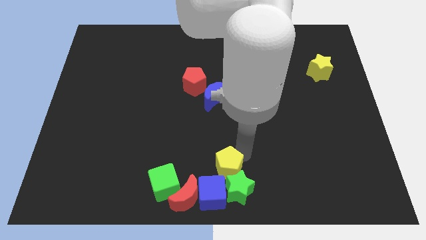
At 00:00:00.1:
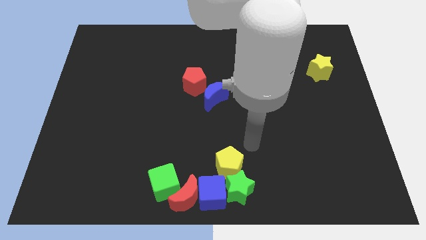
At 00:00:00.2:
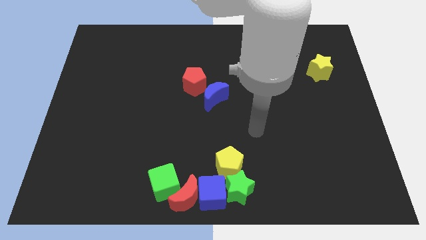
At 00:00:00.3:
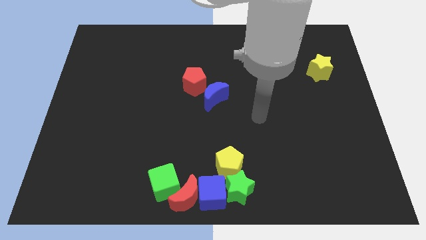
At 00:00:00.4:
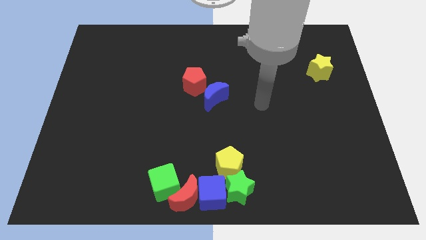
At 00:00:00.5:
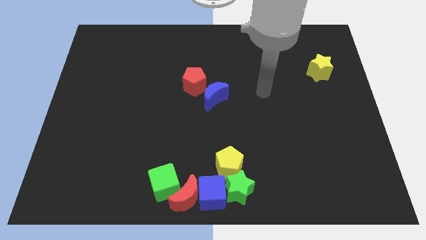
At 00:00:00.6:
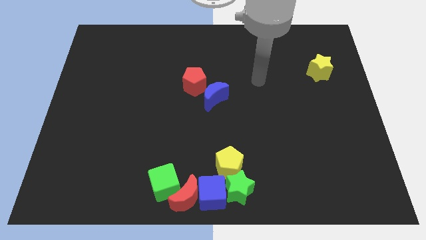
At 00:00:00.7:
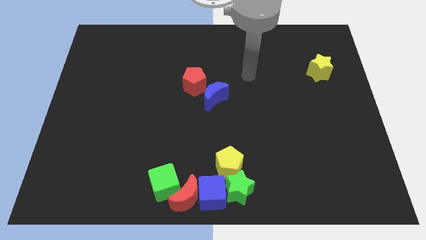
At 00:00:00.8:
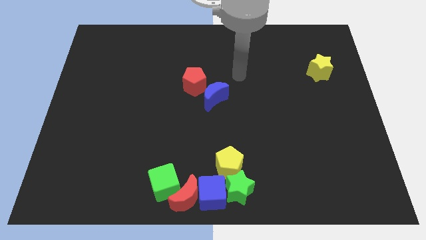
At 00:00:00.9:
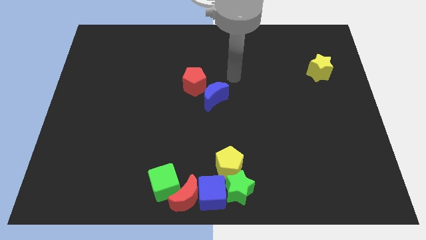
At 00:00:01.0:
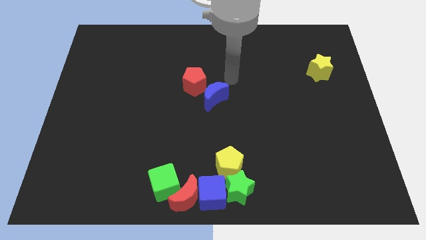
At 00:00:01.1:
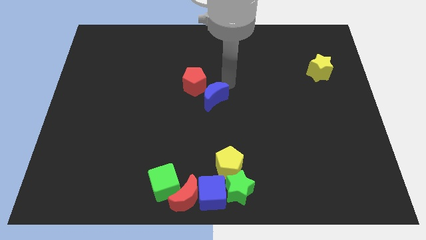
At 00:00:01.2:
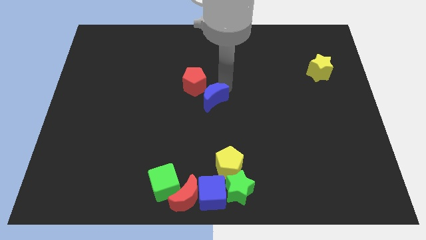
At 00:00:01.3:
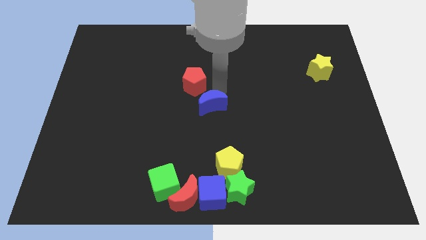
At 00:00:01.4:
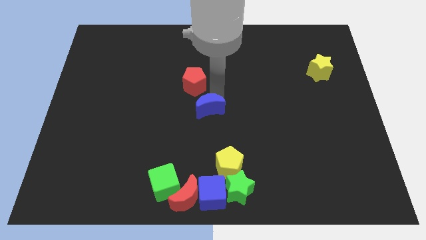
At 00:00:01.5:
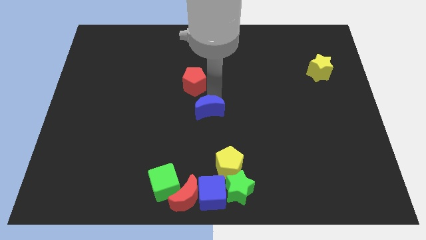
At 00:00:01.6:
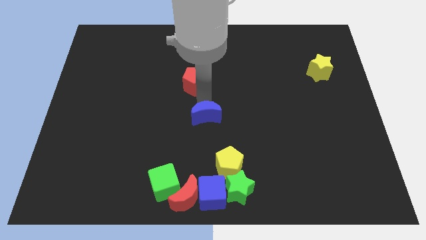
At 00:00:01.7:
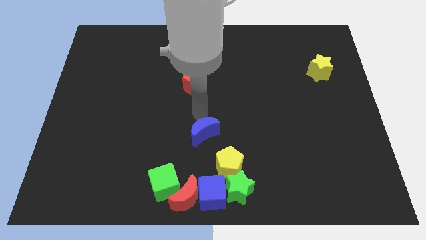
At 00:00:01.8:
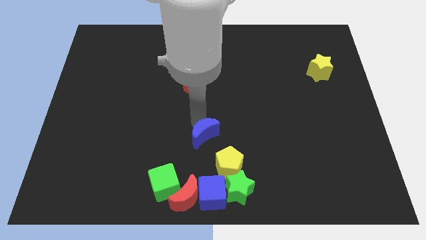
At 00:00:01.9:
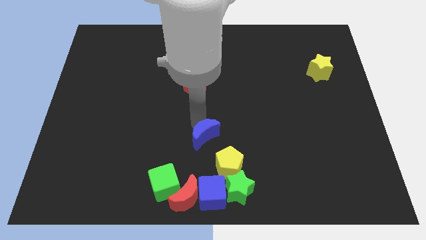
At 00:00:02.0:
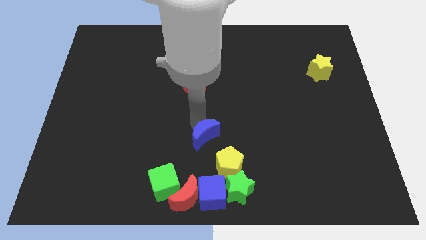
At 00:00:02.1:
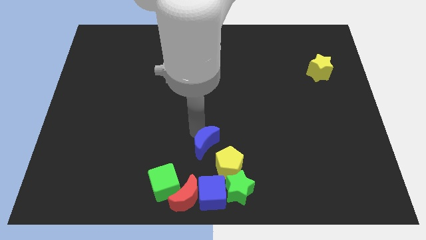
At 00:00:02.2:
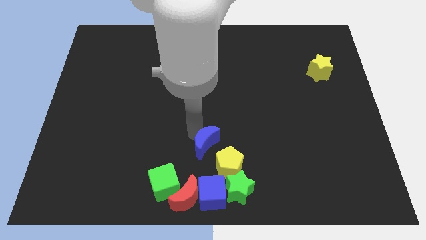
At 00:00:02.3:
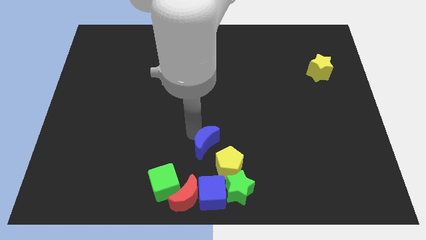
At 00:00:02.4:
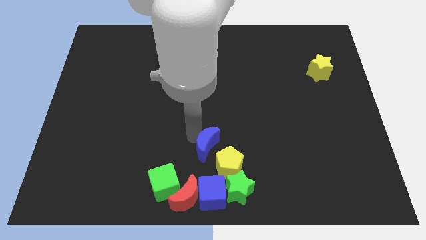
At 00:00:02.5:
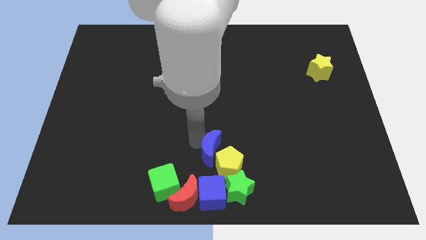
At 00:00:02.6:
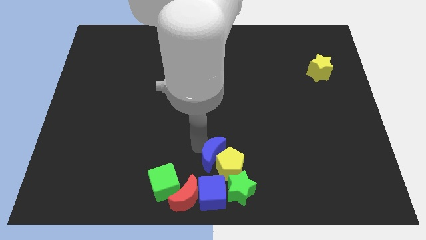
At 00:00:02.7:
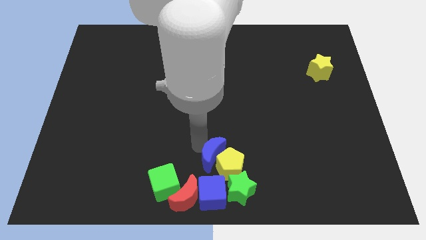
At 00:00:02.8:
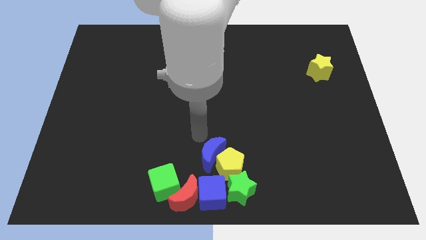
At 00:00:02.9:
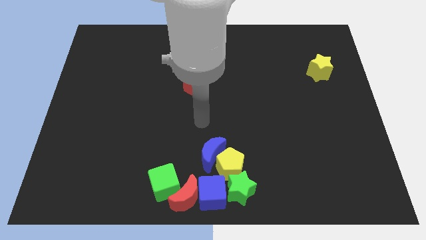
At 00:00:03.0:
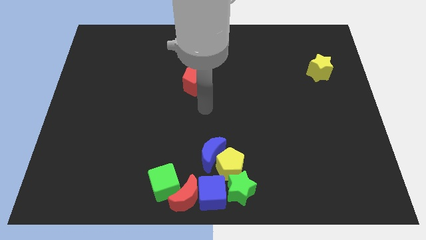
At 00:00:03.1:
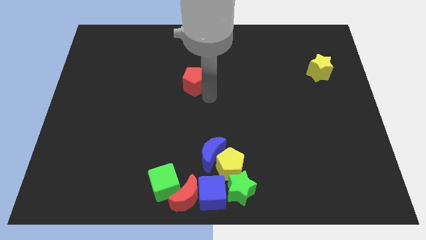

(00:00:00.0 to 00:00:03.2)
separate blue moon and the red pentagon

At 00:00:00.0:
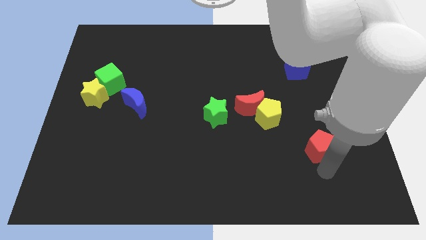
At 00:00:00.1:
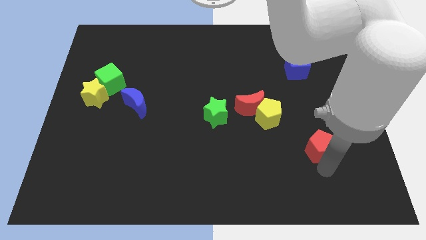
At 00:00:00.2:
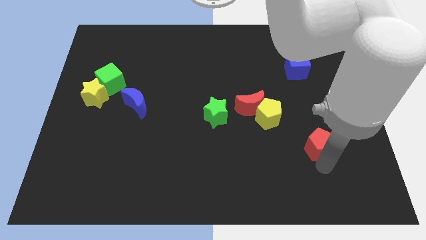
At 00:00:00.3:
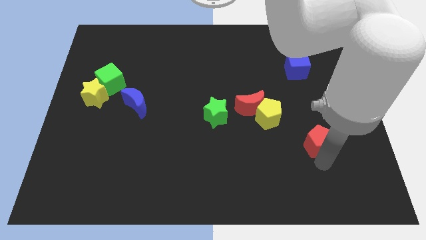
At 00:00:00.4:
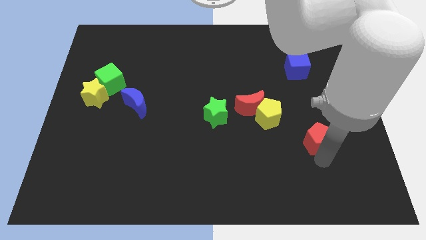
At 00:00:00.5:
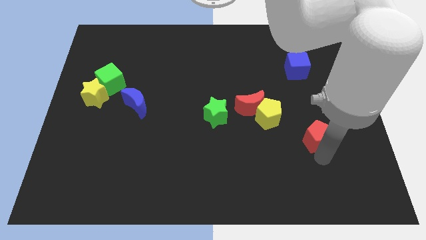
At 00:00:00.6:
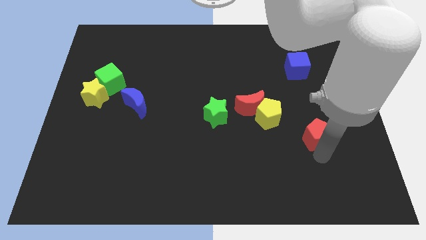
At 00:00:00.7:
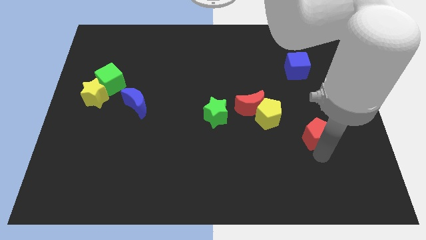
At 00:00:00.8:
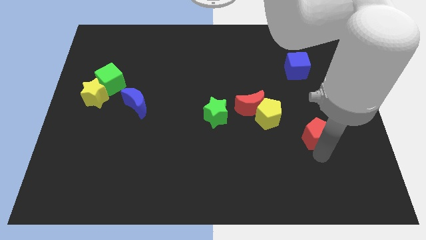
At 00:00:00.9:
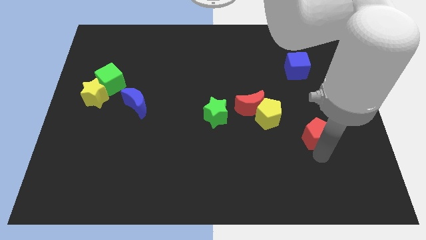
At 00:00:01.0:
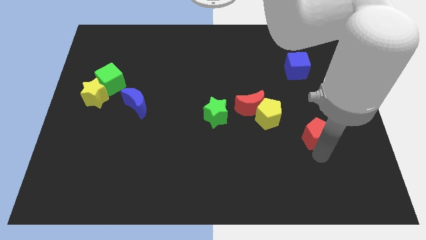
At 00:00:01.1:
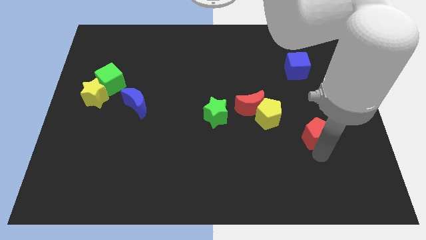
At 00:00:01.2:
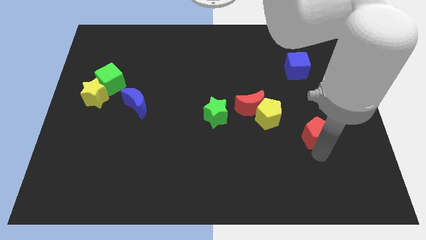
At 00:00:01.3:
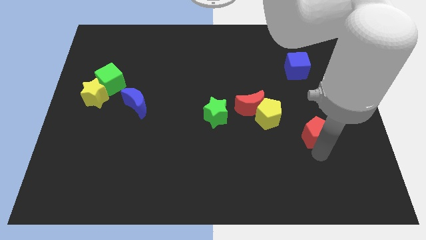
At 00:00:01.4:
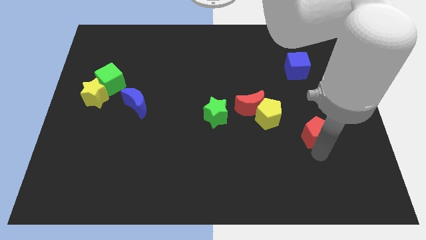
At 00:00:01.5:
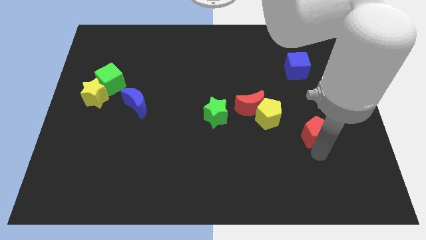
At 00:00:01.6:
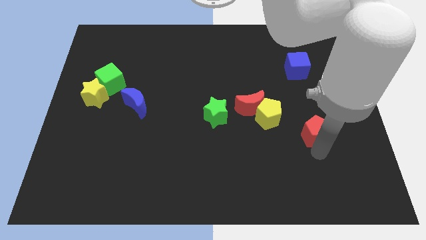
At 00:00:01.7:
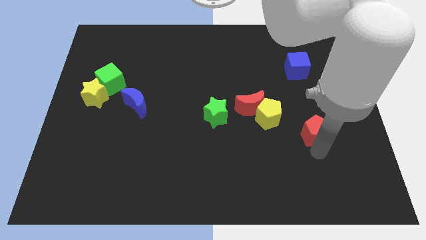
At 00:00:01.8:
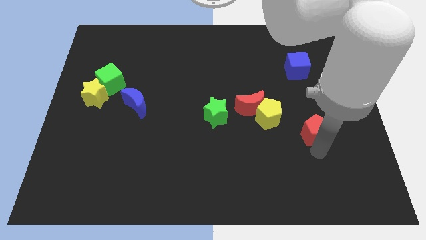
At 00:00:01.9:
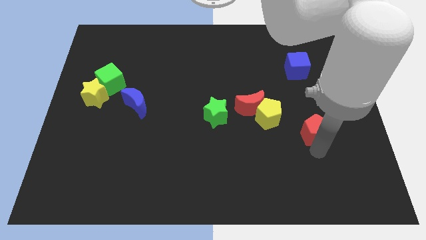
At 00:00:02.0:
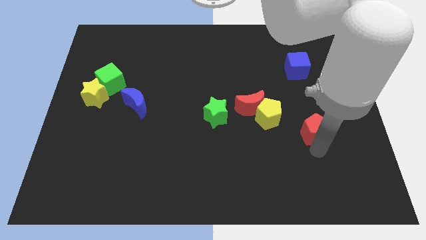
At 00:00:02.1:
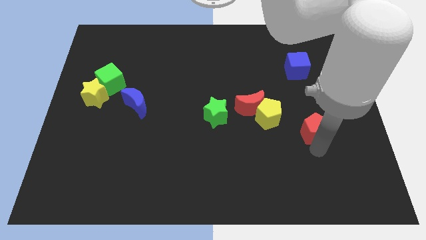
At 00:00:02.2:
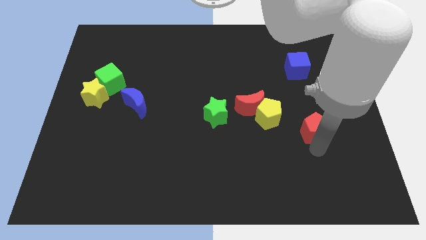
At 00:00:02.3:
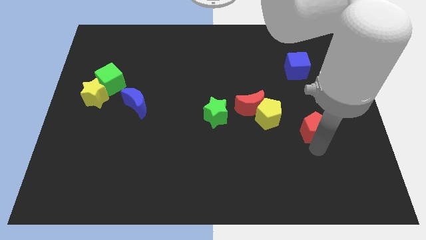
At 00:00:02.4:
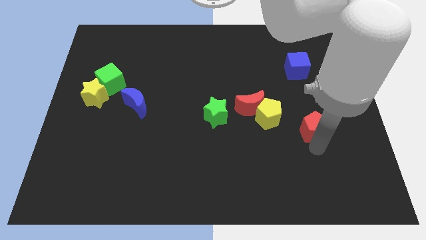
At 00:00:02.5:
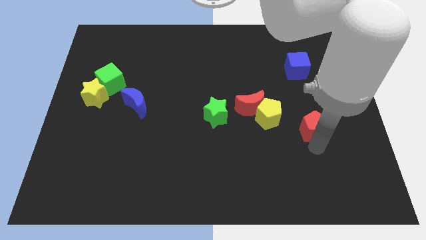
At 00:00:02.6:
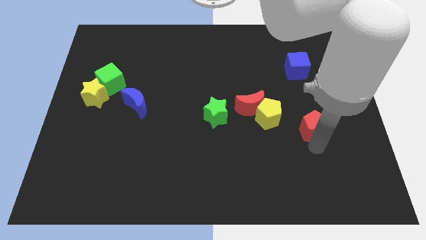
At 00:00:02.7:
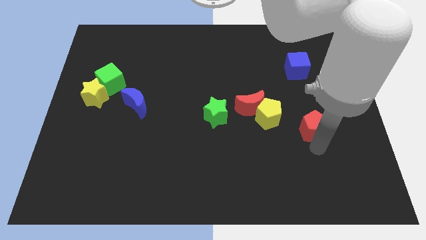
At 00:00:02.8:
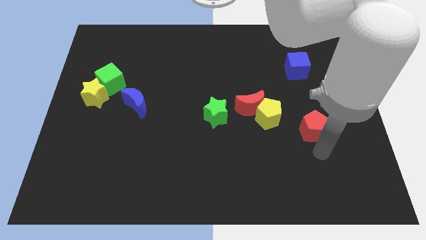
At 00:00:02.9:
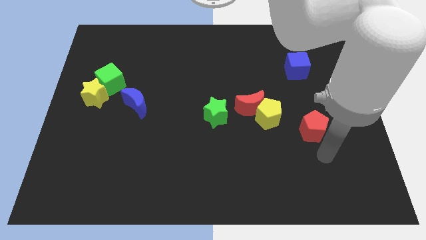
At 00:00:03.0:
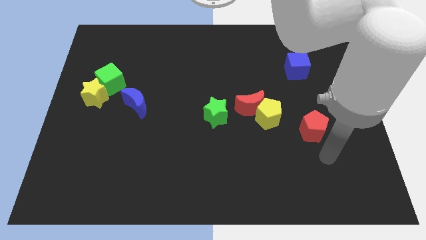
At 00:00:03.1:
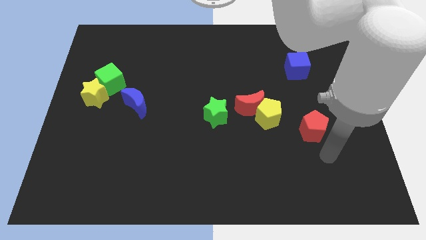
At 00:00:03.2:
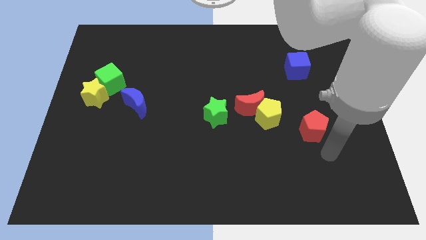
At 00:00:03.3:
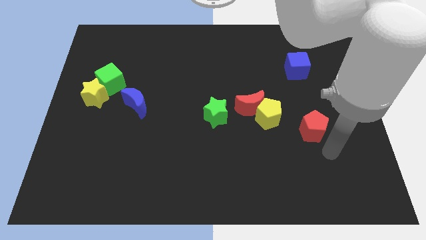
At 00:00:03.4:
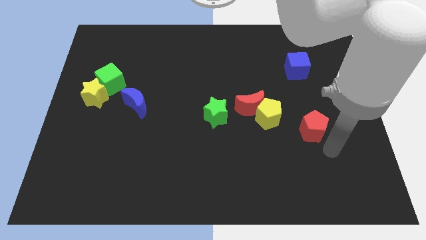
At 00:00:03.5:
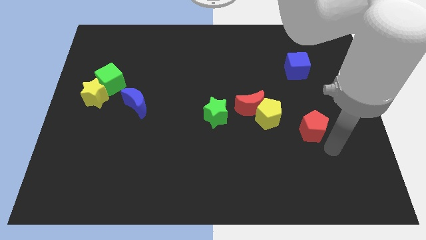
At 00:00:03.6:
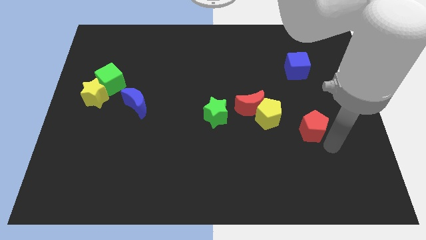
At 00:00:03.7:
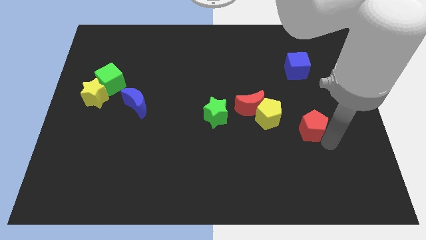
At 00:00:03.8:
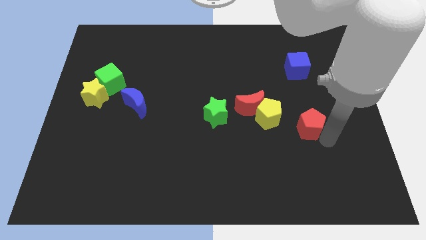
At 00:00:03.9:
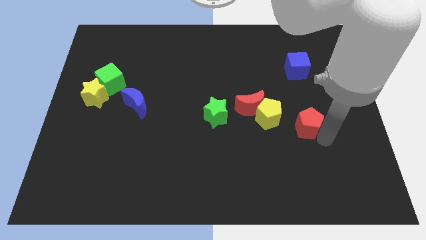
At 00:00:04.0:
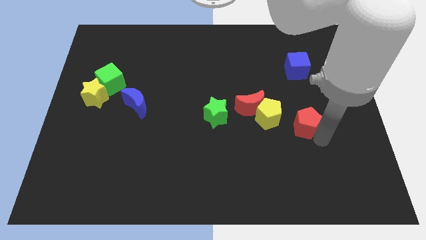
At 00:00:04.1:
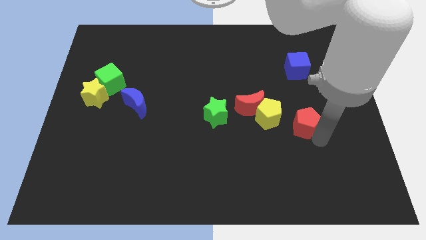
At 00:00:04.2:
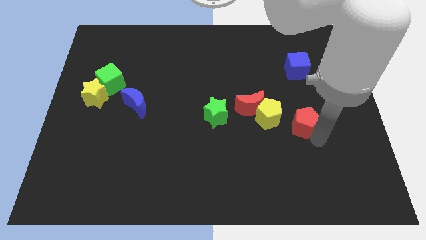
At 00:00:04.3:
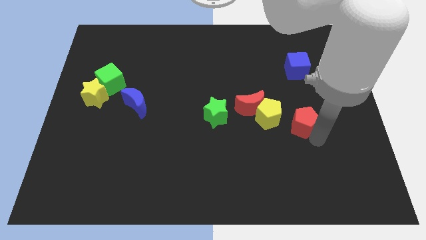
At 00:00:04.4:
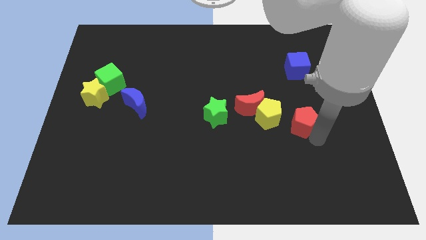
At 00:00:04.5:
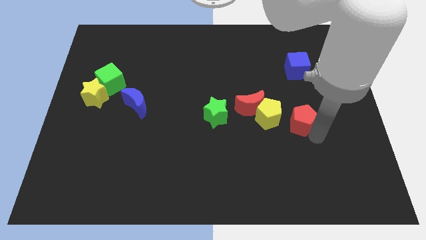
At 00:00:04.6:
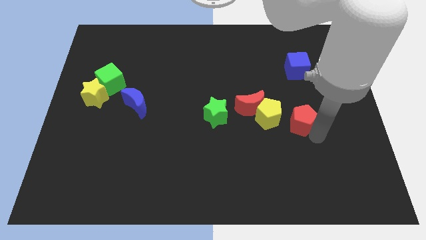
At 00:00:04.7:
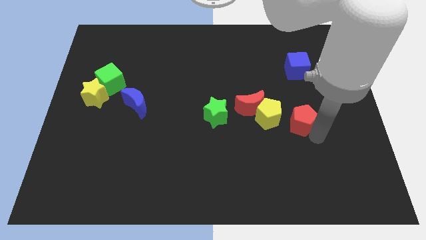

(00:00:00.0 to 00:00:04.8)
place the red pentagon to the right of the yellow pentagon

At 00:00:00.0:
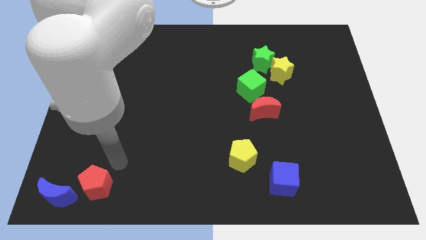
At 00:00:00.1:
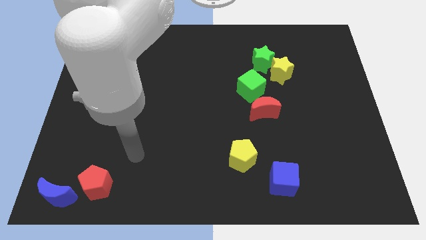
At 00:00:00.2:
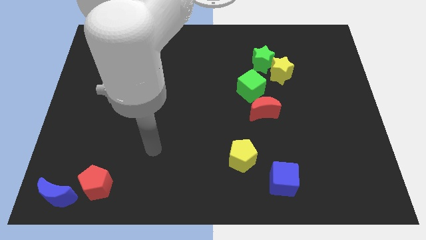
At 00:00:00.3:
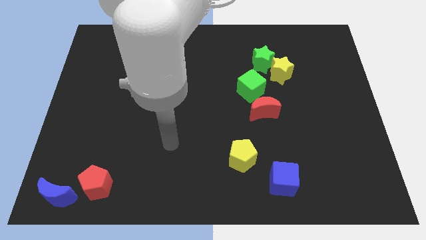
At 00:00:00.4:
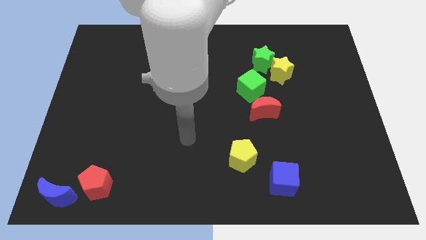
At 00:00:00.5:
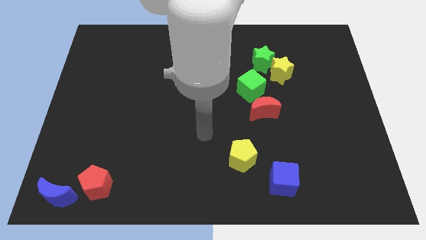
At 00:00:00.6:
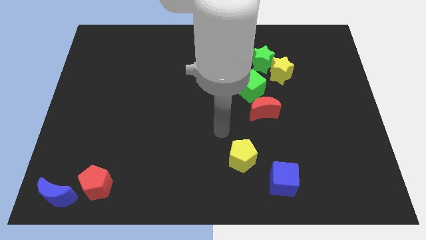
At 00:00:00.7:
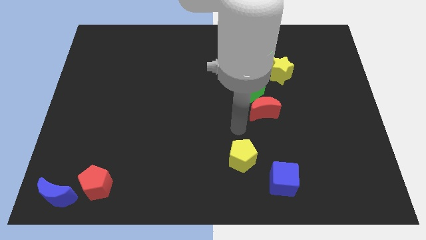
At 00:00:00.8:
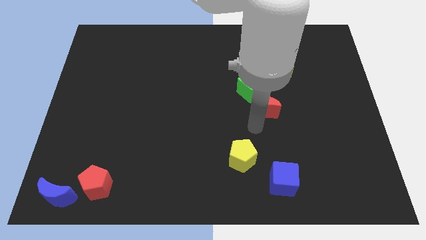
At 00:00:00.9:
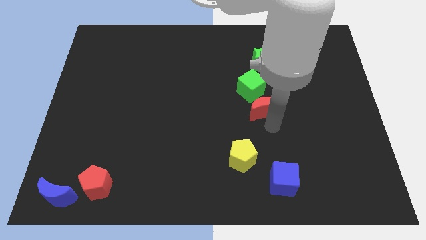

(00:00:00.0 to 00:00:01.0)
move your arm below the red crescent
